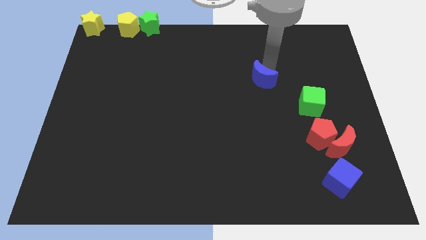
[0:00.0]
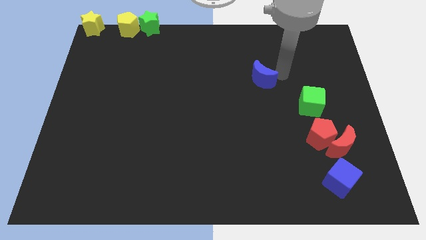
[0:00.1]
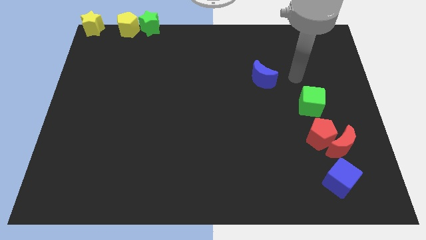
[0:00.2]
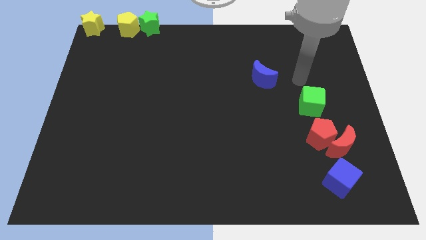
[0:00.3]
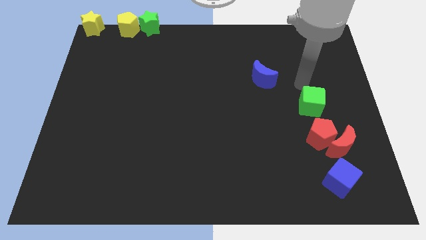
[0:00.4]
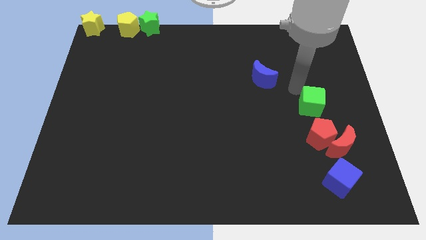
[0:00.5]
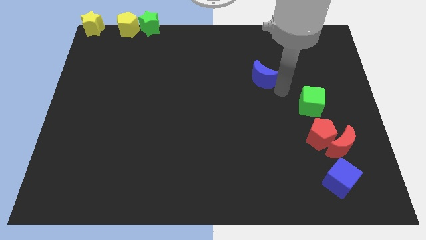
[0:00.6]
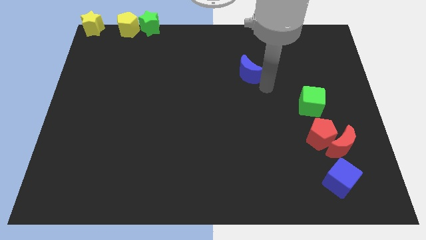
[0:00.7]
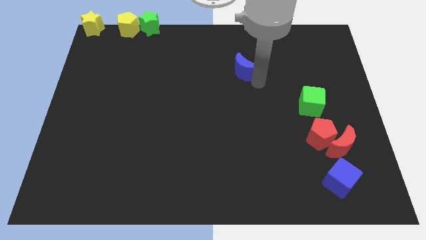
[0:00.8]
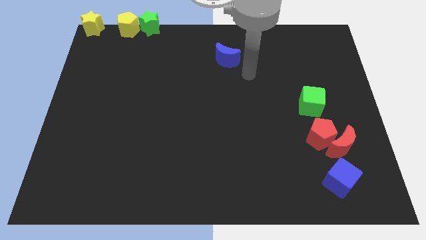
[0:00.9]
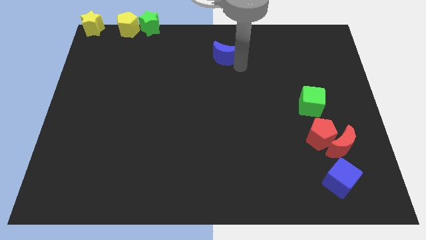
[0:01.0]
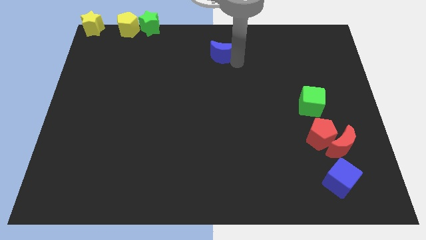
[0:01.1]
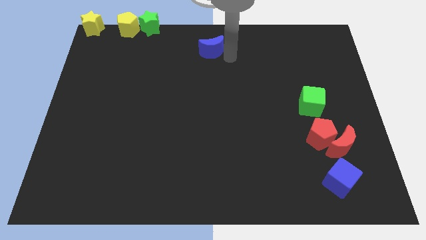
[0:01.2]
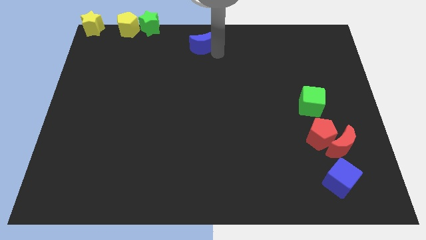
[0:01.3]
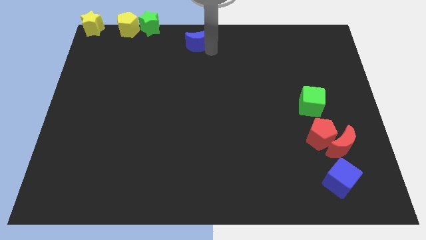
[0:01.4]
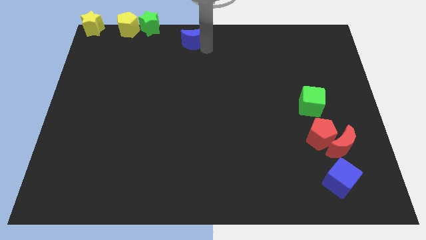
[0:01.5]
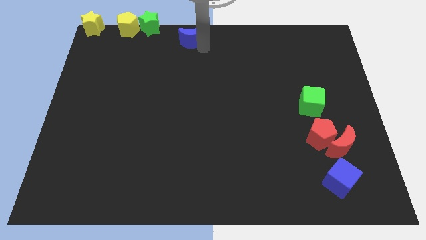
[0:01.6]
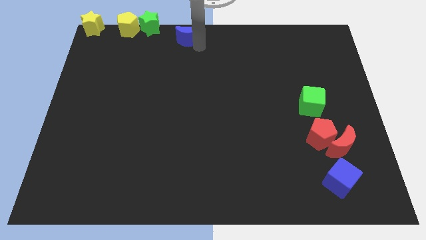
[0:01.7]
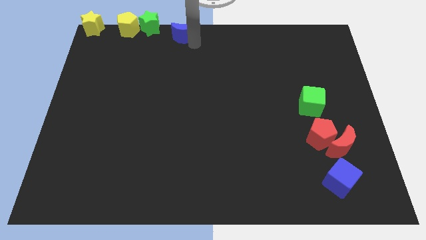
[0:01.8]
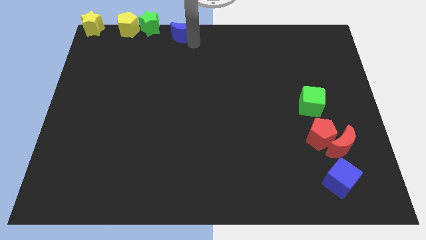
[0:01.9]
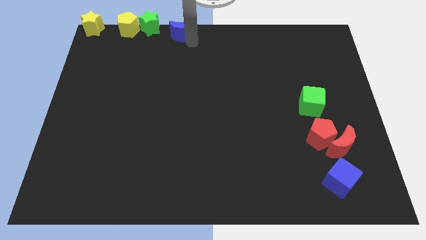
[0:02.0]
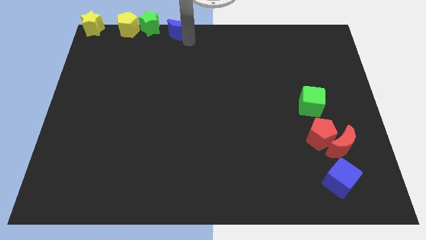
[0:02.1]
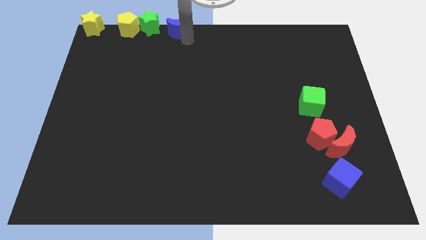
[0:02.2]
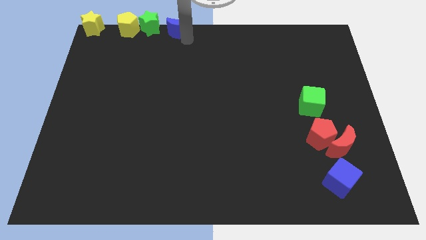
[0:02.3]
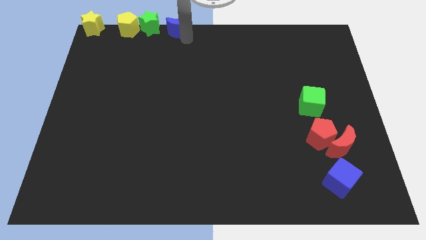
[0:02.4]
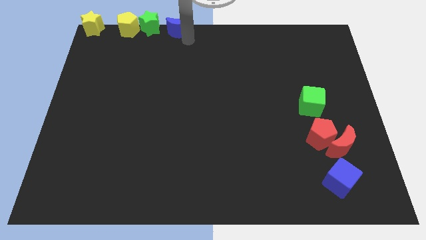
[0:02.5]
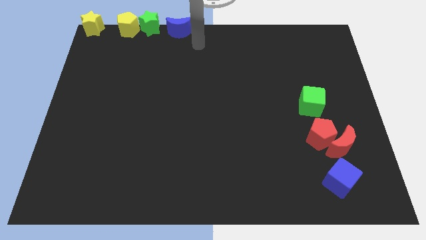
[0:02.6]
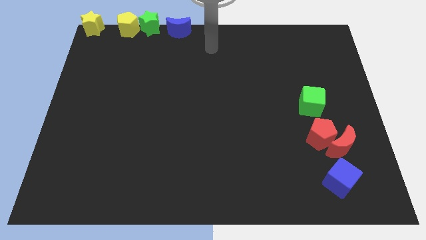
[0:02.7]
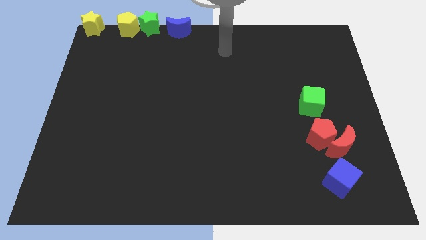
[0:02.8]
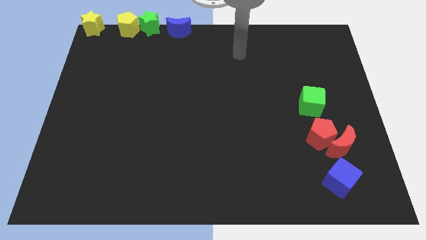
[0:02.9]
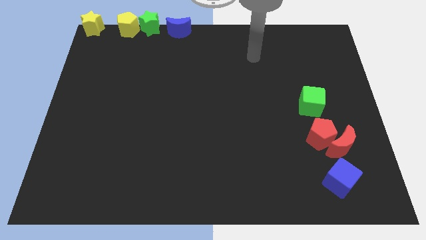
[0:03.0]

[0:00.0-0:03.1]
place the blue moon right to the green star

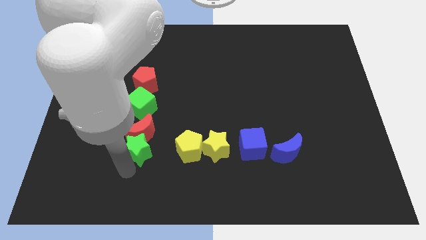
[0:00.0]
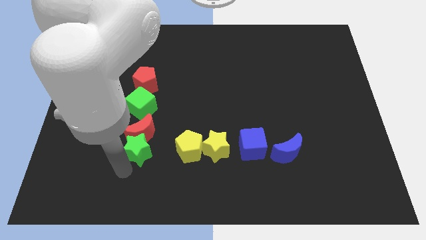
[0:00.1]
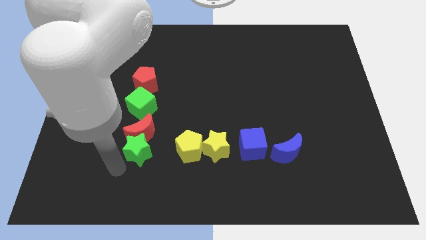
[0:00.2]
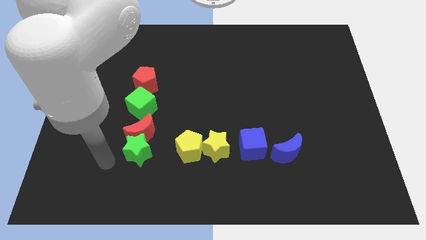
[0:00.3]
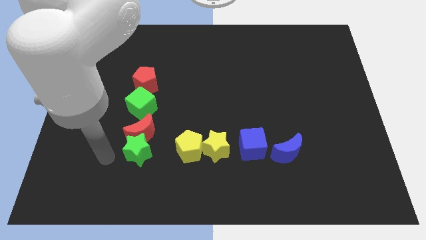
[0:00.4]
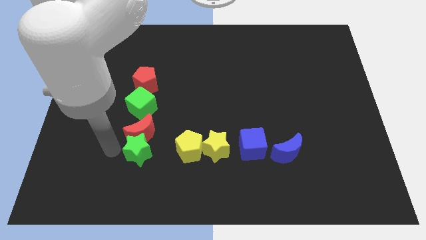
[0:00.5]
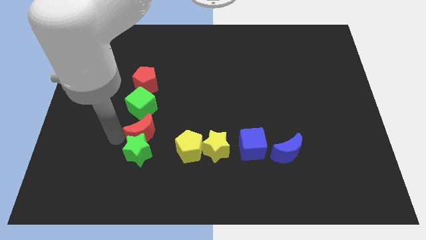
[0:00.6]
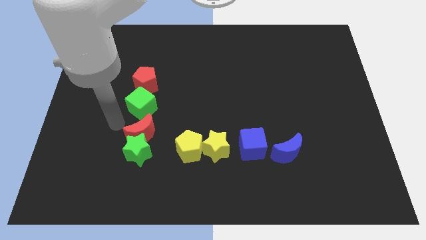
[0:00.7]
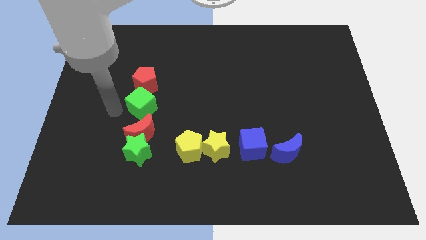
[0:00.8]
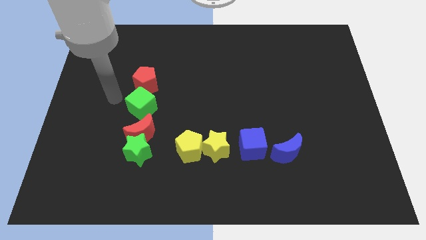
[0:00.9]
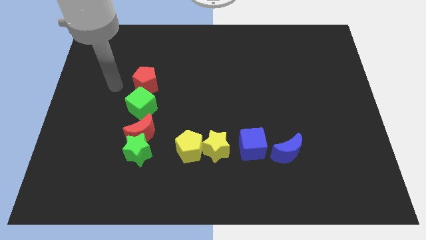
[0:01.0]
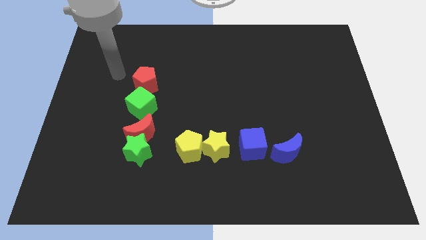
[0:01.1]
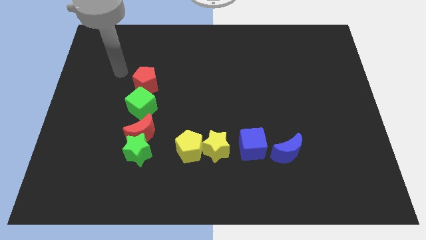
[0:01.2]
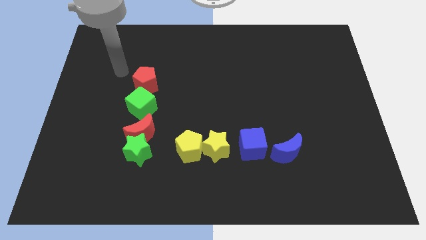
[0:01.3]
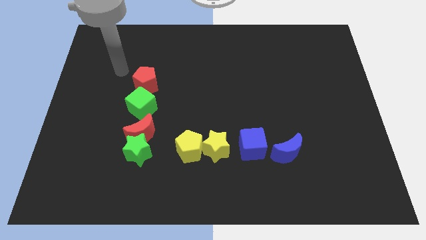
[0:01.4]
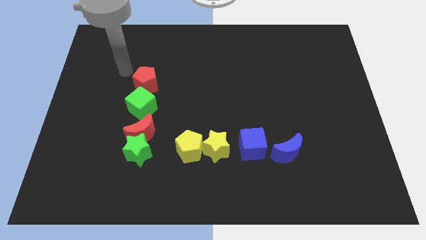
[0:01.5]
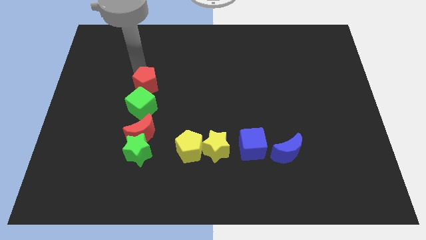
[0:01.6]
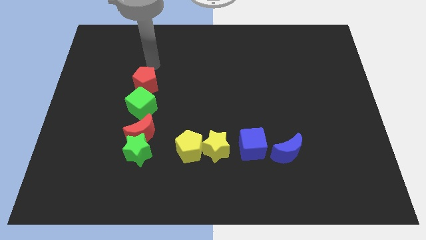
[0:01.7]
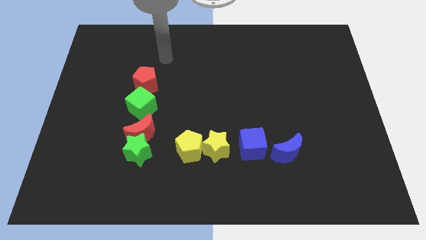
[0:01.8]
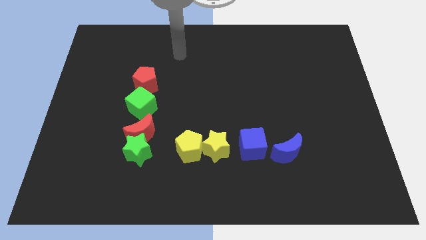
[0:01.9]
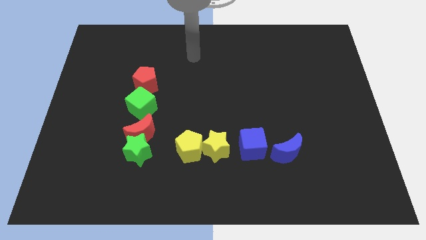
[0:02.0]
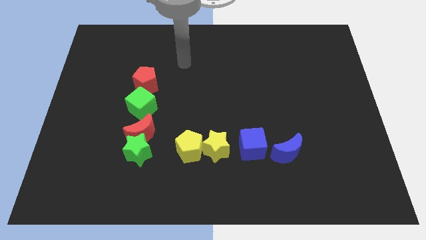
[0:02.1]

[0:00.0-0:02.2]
move your hand away from the vertical line of blocks

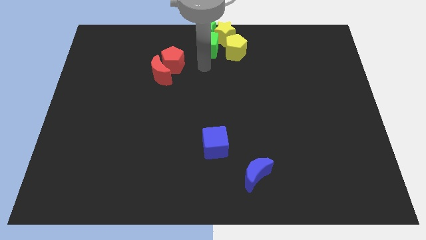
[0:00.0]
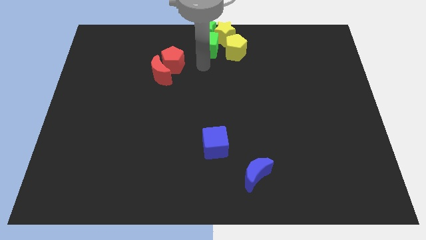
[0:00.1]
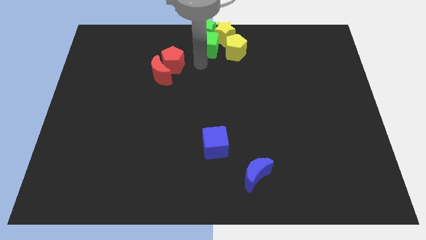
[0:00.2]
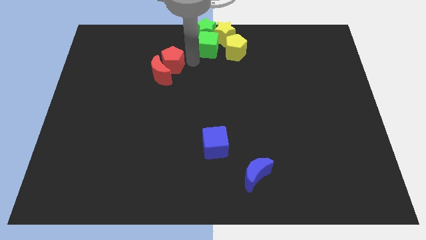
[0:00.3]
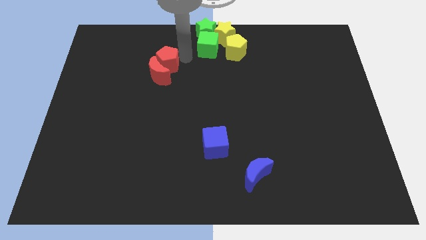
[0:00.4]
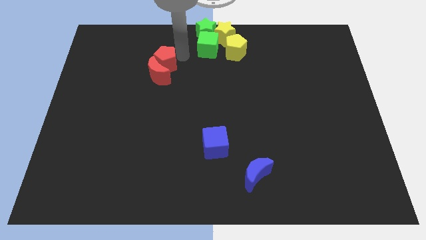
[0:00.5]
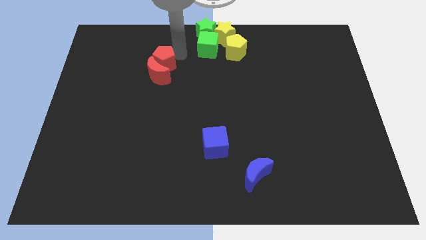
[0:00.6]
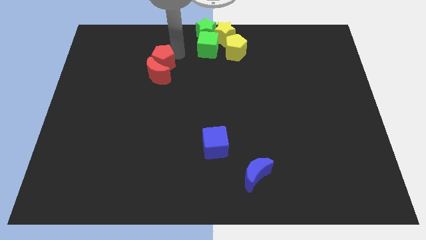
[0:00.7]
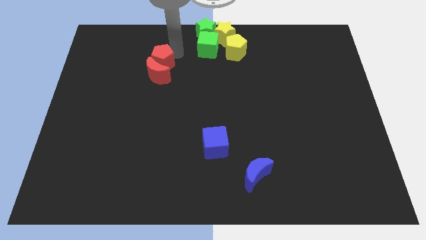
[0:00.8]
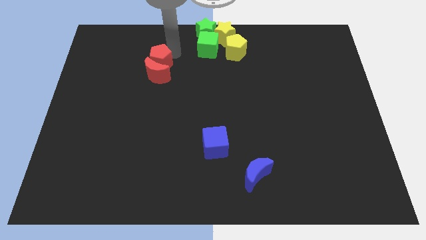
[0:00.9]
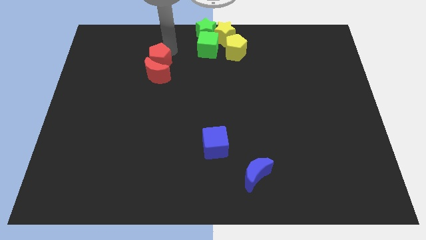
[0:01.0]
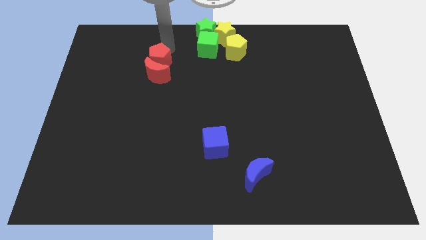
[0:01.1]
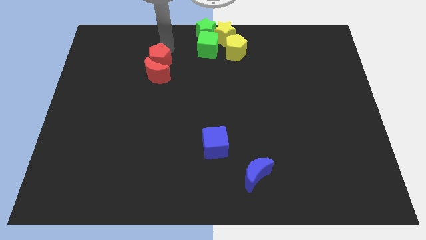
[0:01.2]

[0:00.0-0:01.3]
slightly touch the red pentagon

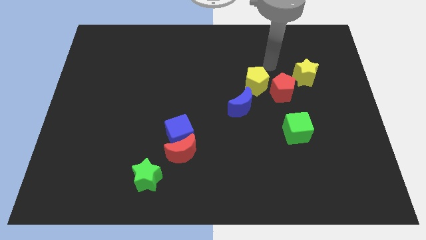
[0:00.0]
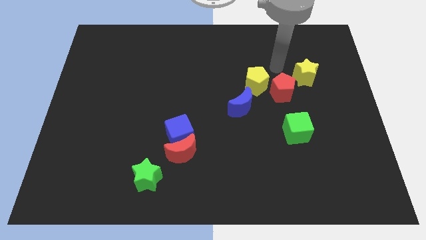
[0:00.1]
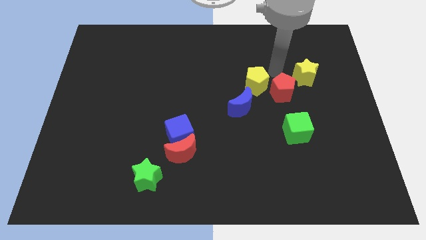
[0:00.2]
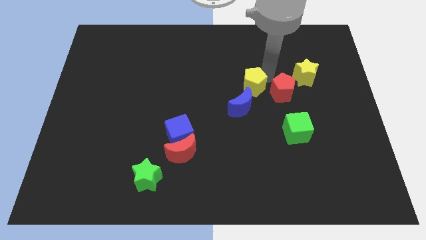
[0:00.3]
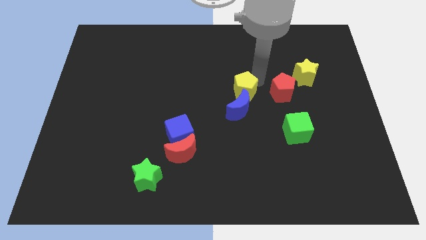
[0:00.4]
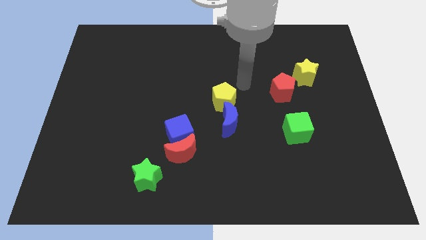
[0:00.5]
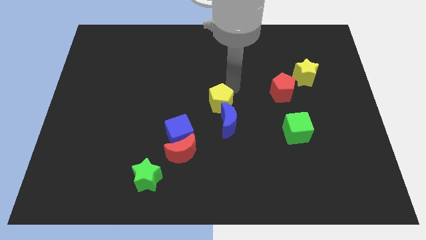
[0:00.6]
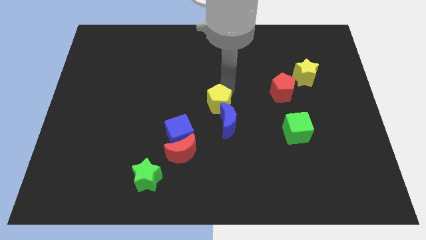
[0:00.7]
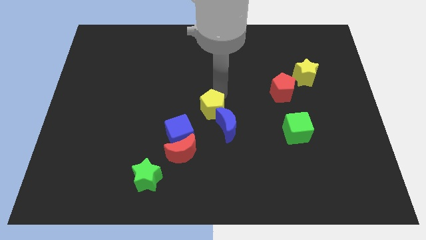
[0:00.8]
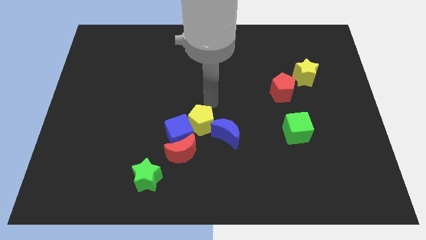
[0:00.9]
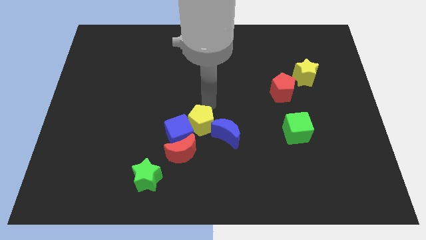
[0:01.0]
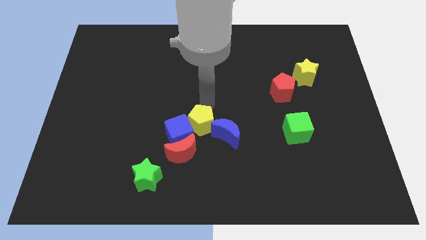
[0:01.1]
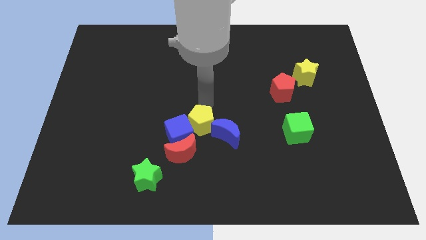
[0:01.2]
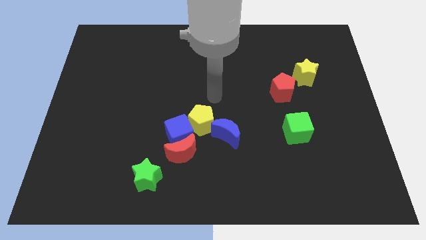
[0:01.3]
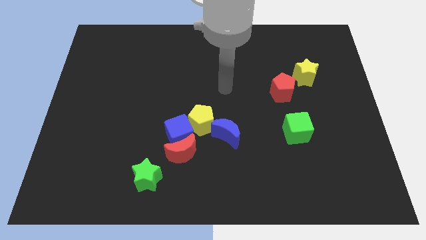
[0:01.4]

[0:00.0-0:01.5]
place yellow pentagon to the right of blue cube

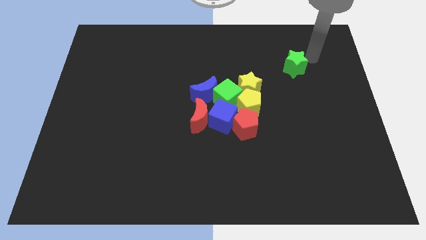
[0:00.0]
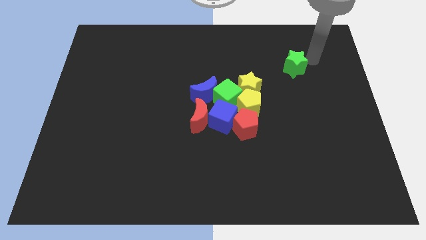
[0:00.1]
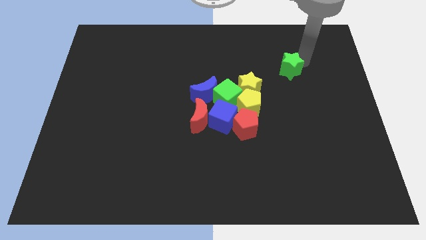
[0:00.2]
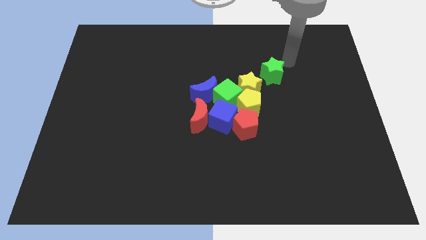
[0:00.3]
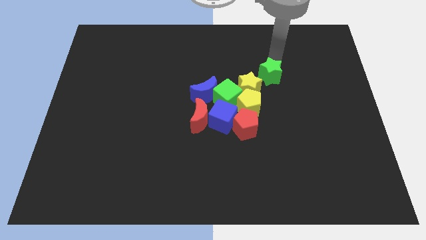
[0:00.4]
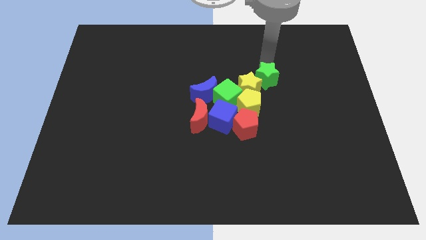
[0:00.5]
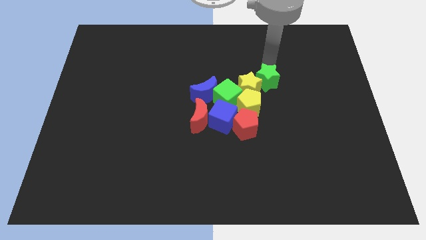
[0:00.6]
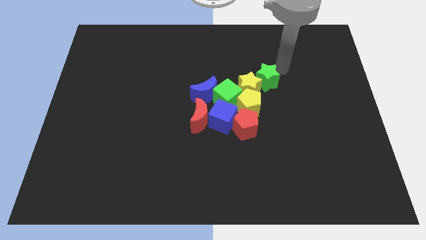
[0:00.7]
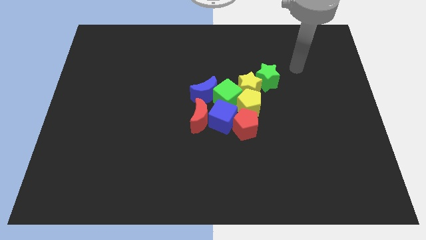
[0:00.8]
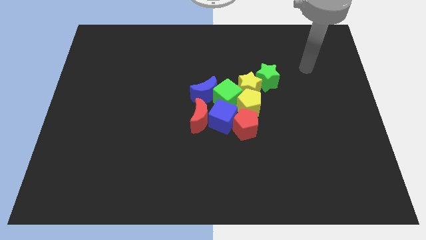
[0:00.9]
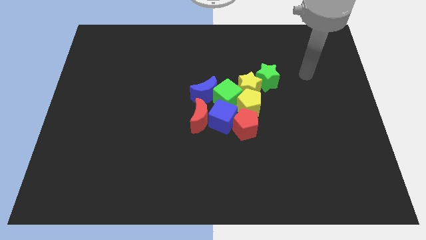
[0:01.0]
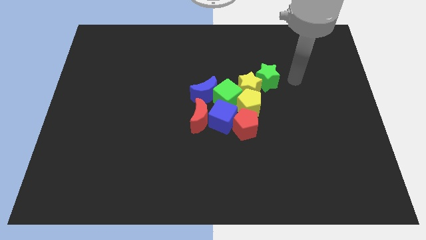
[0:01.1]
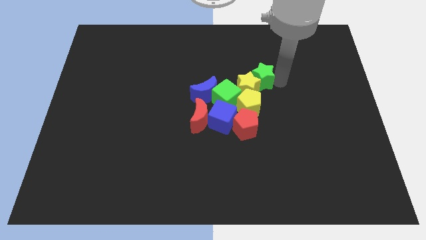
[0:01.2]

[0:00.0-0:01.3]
place the green star digonally to the yellow star
